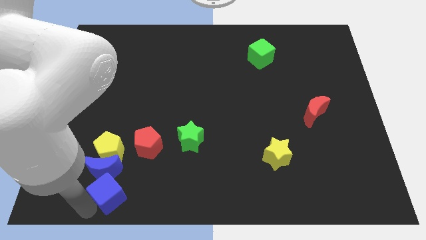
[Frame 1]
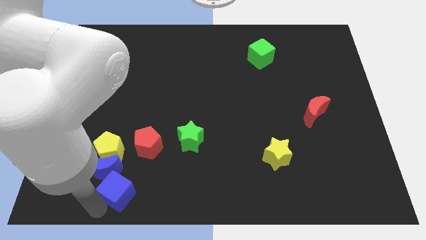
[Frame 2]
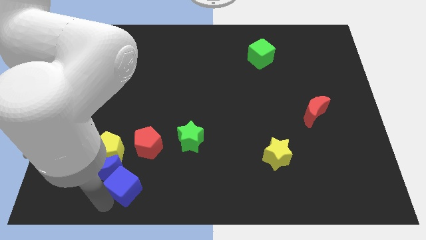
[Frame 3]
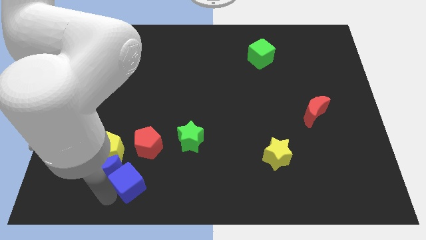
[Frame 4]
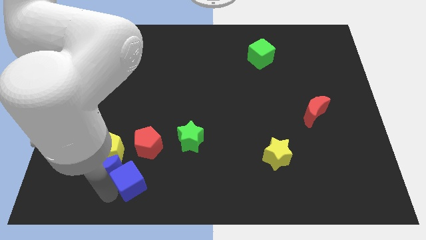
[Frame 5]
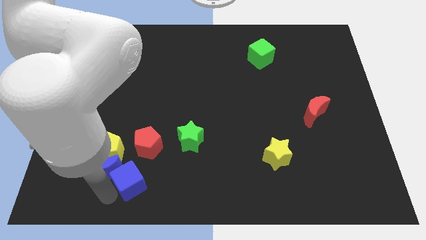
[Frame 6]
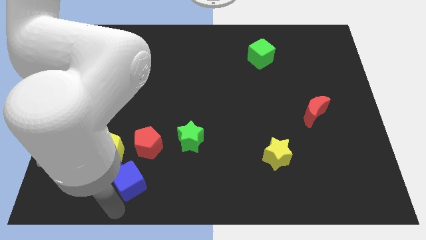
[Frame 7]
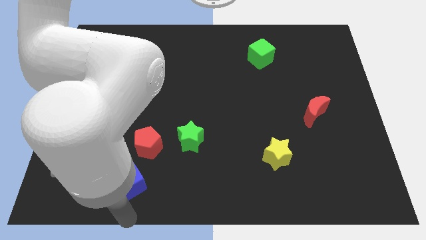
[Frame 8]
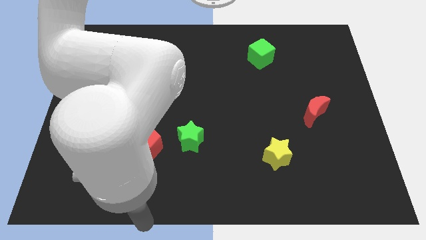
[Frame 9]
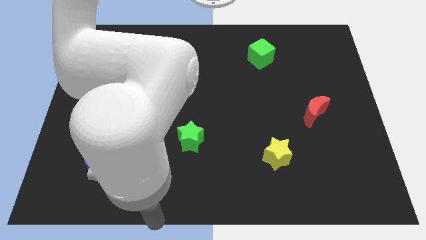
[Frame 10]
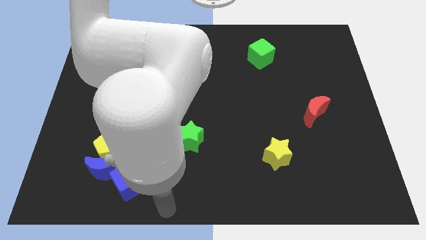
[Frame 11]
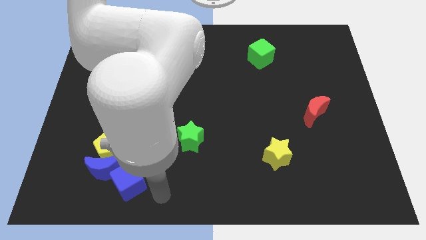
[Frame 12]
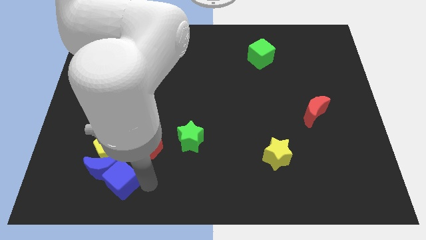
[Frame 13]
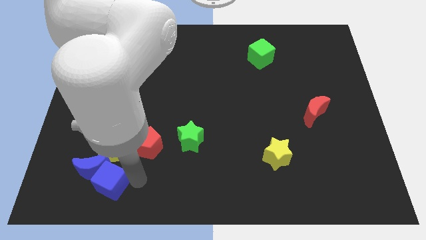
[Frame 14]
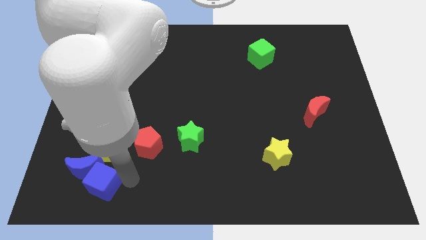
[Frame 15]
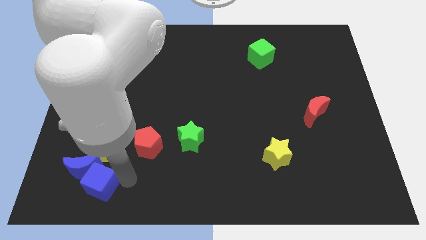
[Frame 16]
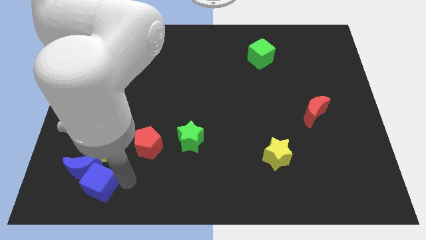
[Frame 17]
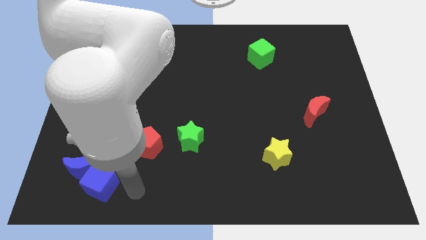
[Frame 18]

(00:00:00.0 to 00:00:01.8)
push the blue cube into the blue crescent

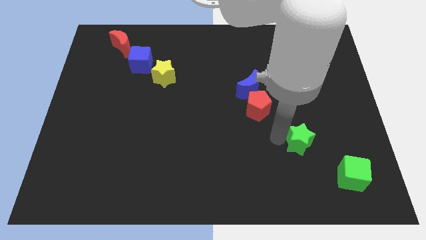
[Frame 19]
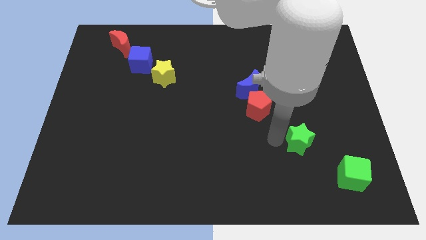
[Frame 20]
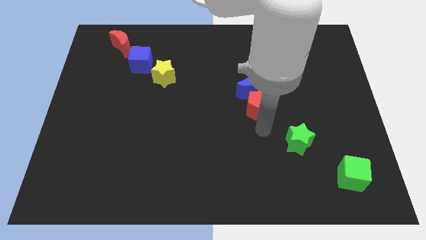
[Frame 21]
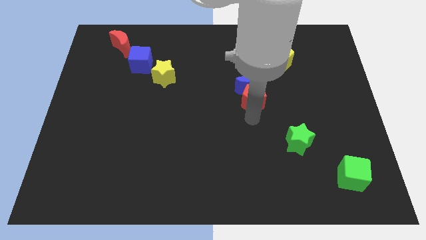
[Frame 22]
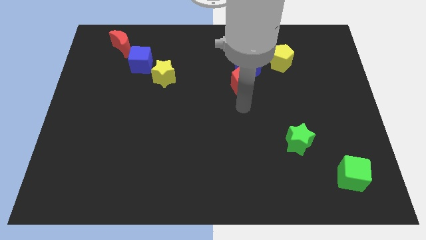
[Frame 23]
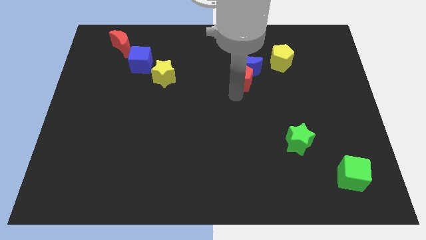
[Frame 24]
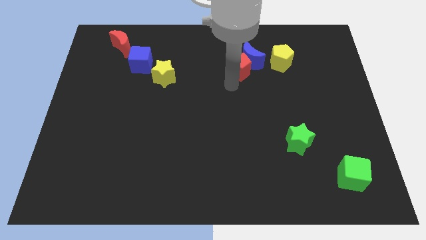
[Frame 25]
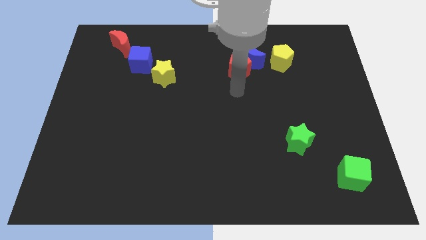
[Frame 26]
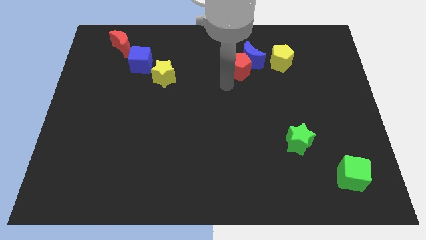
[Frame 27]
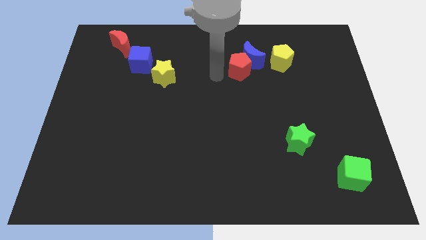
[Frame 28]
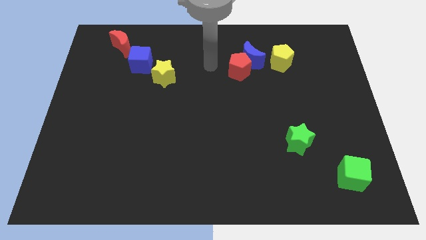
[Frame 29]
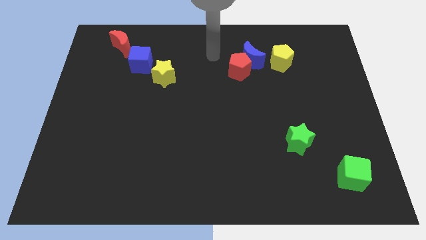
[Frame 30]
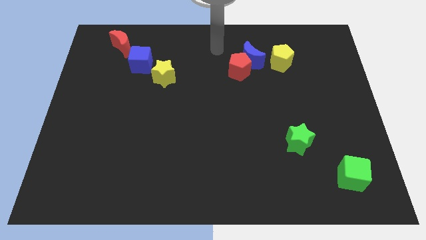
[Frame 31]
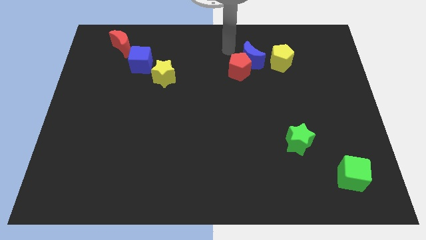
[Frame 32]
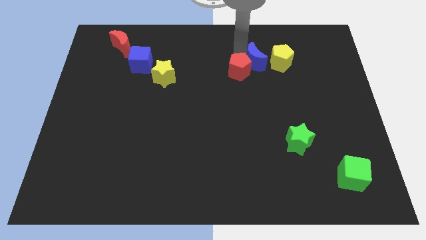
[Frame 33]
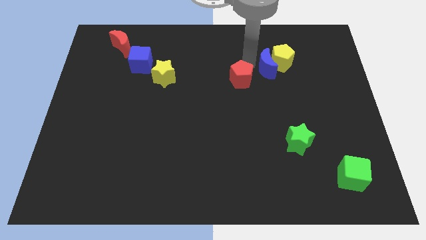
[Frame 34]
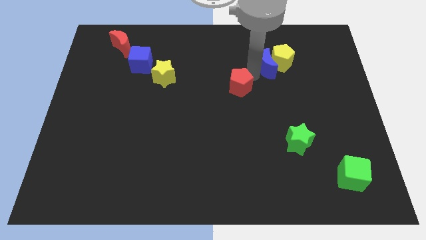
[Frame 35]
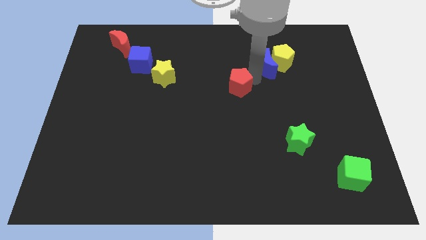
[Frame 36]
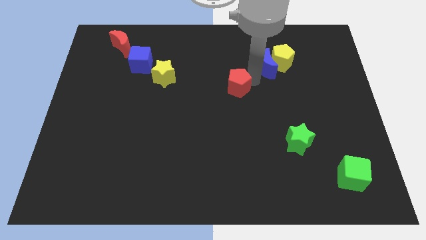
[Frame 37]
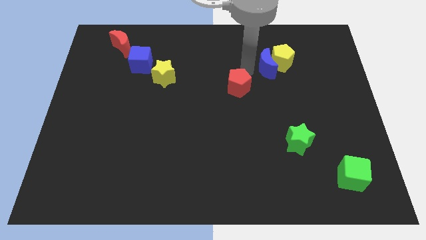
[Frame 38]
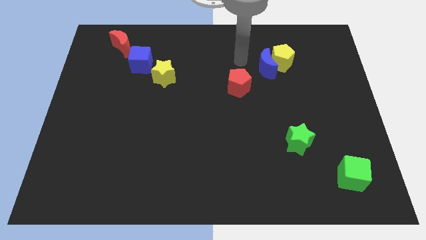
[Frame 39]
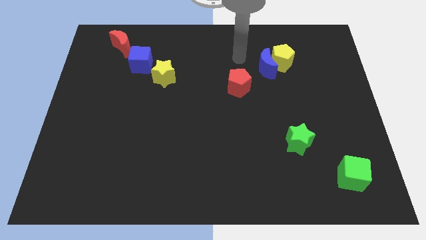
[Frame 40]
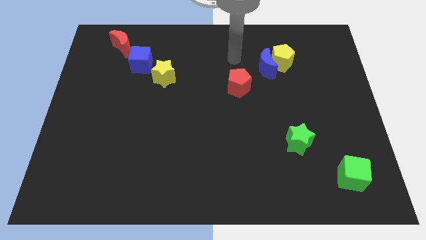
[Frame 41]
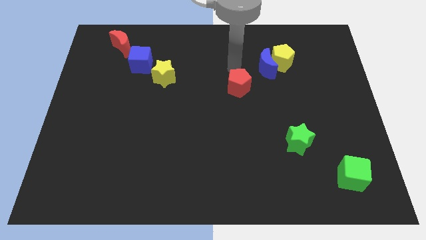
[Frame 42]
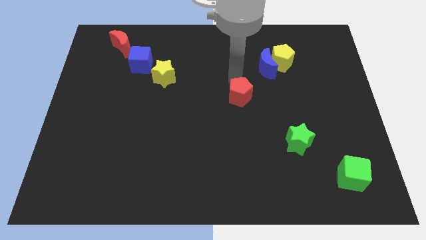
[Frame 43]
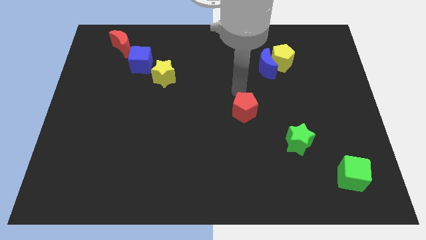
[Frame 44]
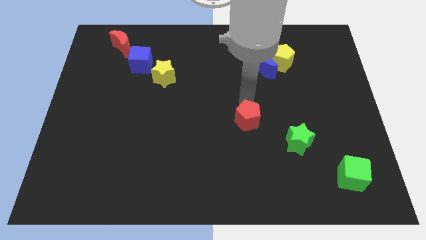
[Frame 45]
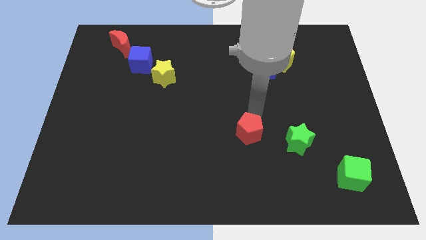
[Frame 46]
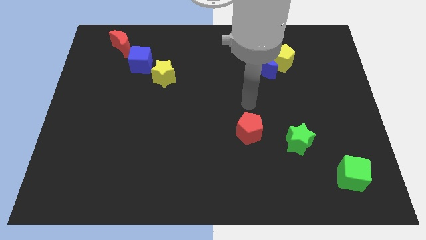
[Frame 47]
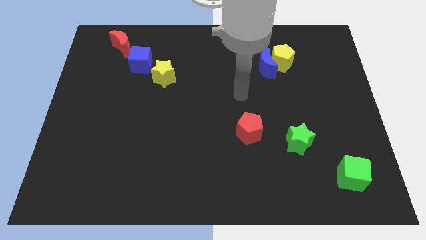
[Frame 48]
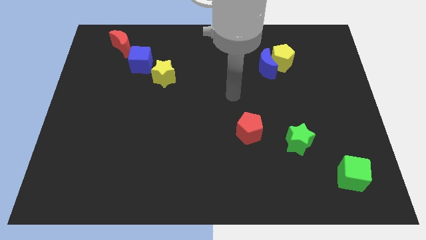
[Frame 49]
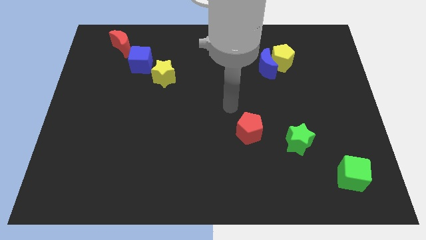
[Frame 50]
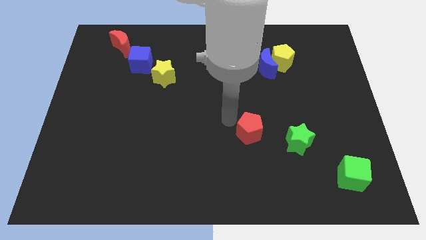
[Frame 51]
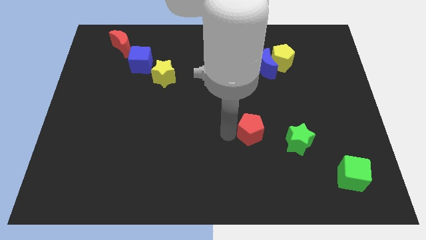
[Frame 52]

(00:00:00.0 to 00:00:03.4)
separate the red pentagon from the blue moon

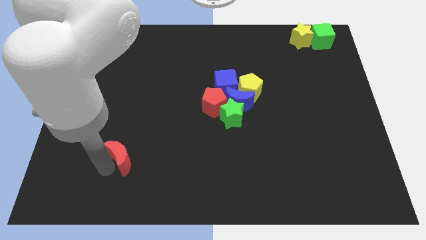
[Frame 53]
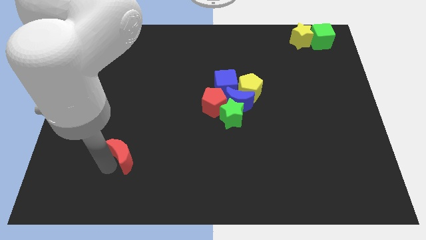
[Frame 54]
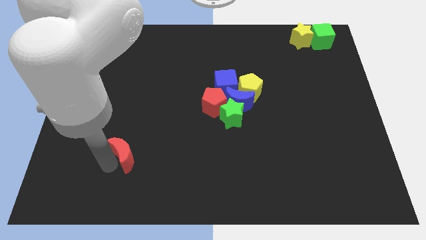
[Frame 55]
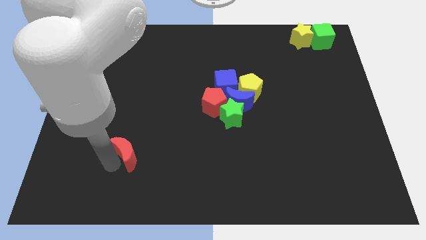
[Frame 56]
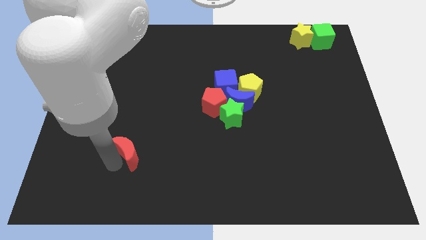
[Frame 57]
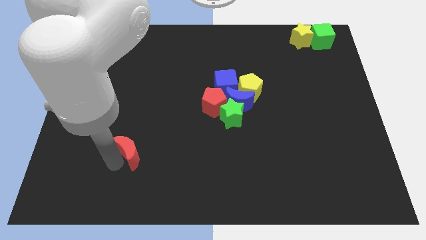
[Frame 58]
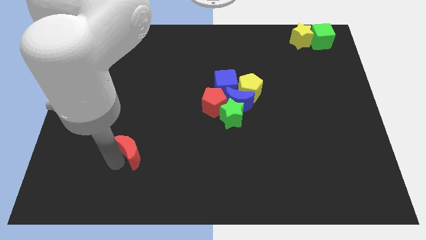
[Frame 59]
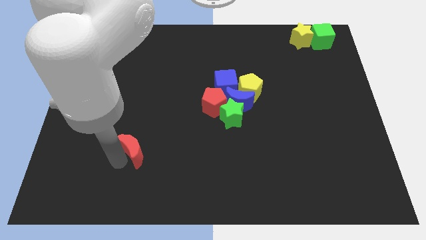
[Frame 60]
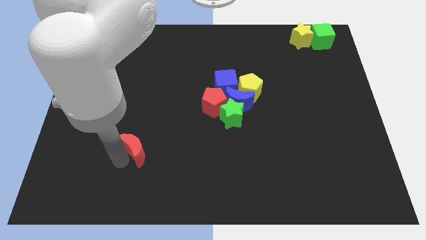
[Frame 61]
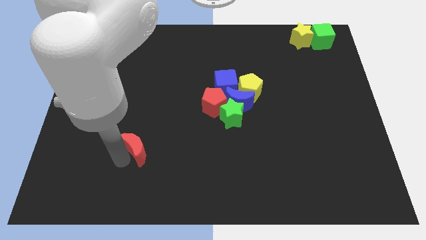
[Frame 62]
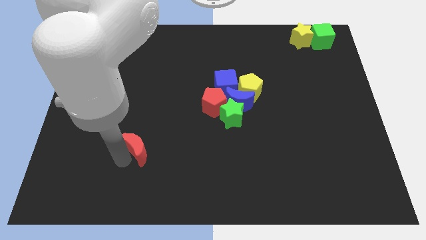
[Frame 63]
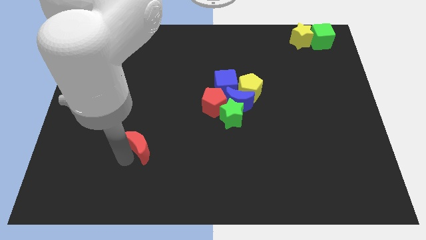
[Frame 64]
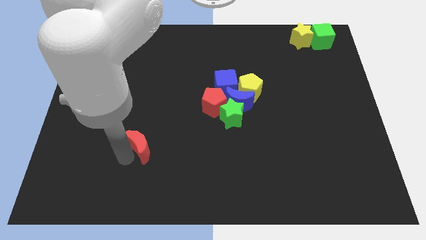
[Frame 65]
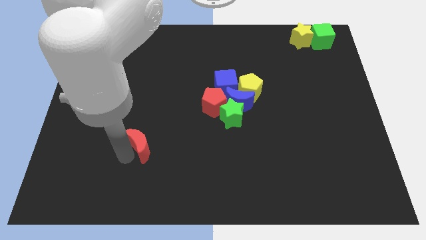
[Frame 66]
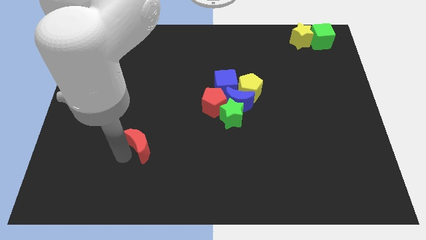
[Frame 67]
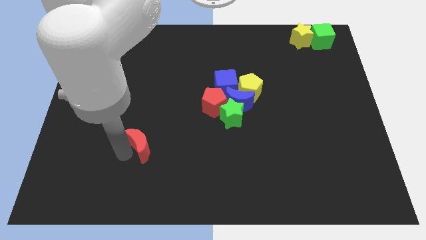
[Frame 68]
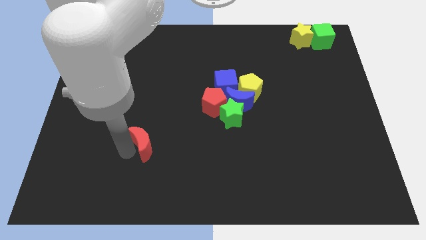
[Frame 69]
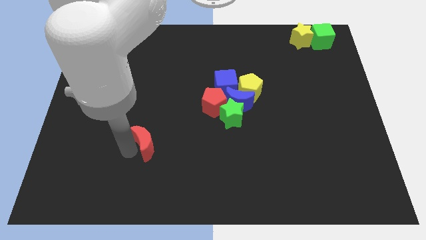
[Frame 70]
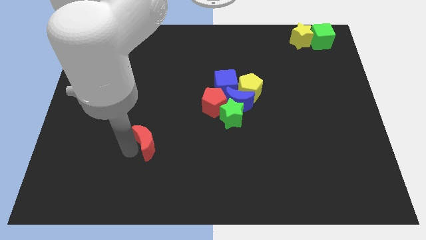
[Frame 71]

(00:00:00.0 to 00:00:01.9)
move the red crescent towards the group of blocks

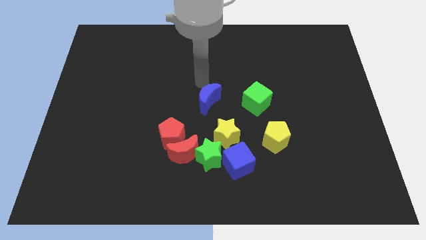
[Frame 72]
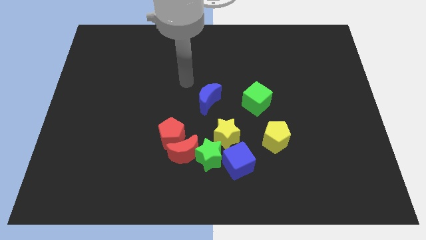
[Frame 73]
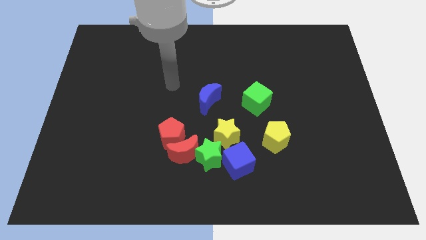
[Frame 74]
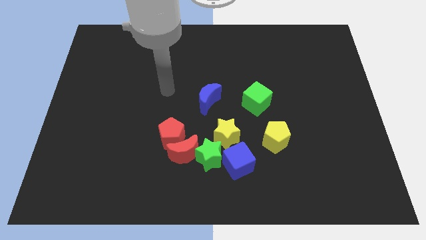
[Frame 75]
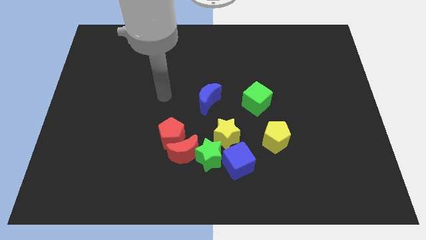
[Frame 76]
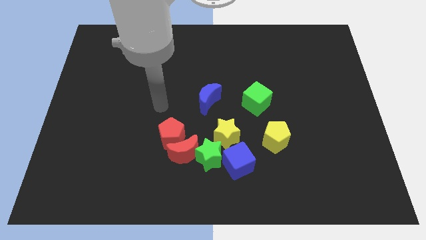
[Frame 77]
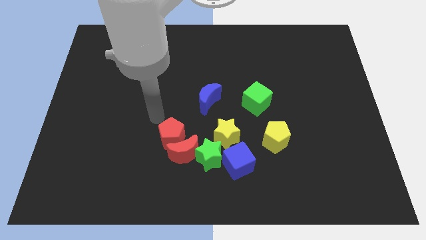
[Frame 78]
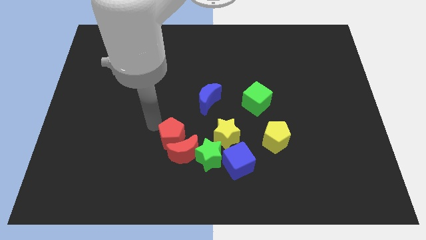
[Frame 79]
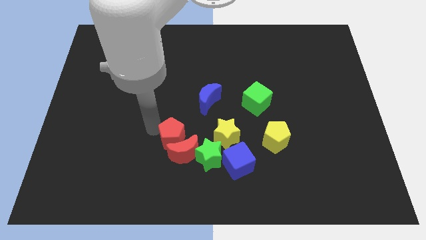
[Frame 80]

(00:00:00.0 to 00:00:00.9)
move your arm away from the blue crescent

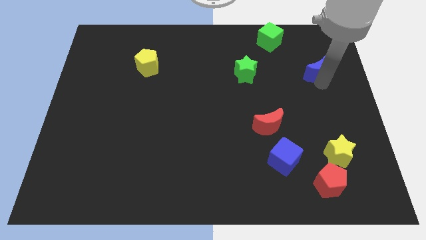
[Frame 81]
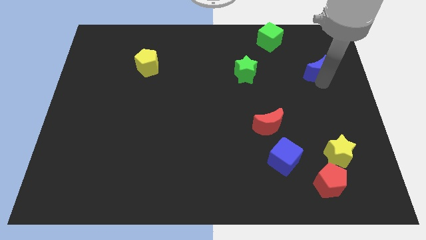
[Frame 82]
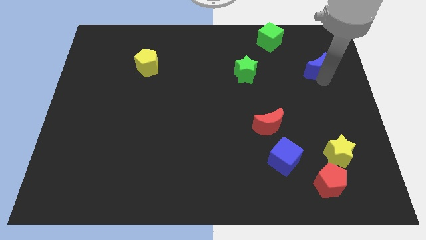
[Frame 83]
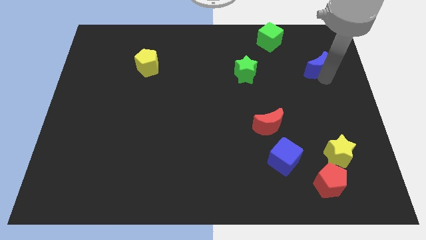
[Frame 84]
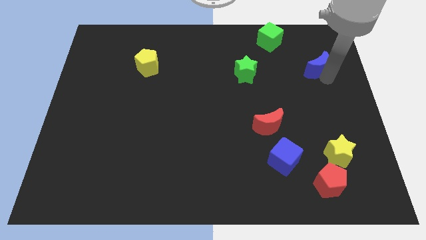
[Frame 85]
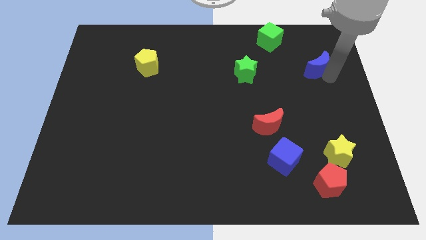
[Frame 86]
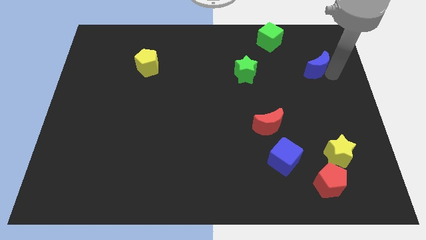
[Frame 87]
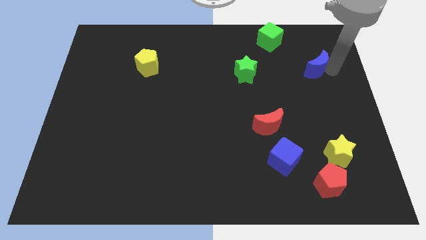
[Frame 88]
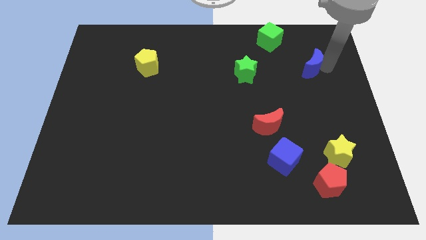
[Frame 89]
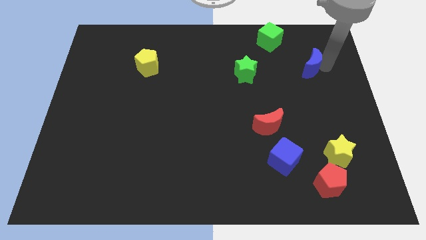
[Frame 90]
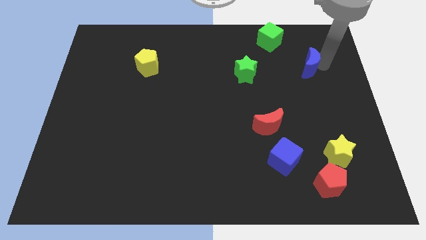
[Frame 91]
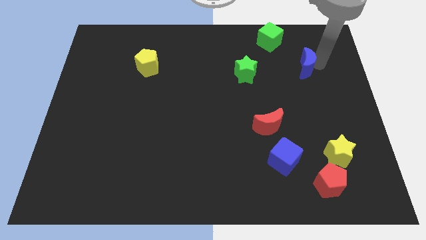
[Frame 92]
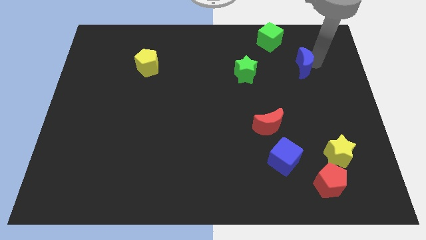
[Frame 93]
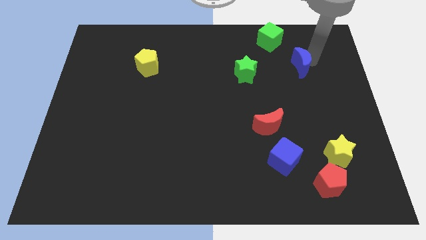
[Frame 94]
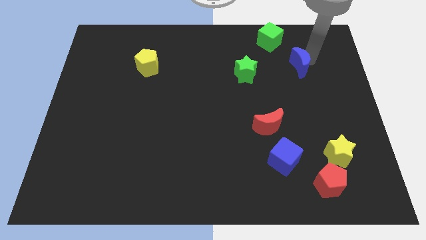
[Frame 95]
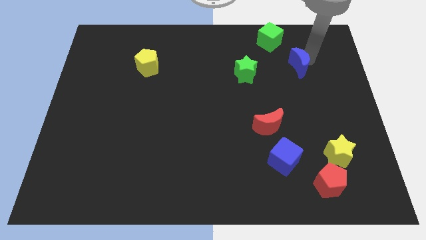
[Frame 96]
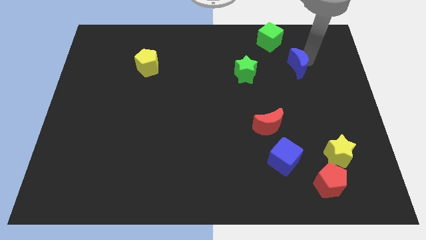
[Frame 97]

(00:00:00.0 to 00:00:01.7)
move the blue moon close to the green cube
